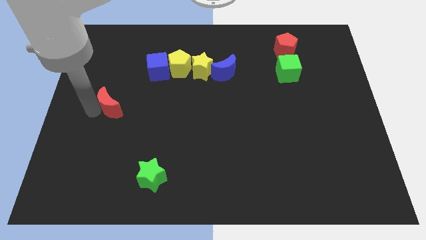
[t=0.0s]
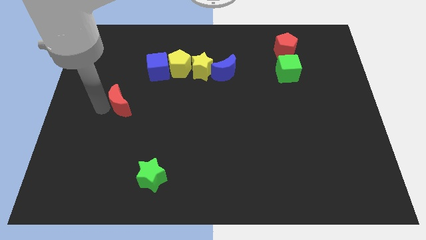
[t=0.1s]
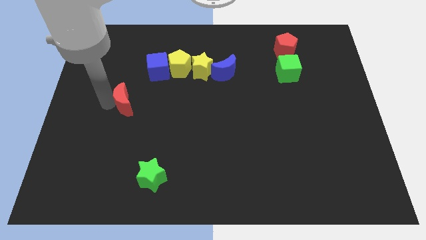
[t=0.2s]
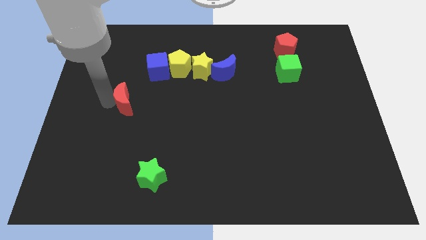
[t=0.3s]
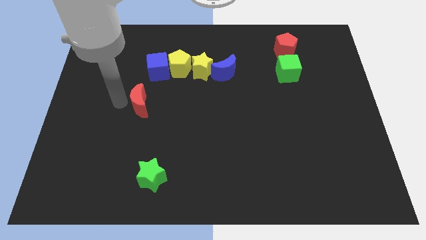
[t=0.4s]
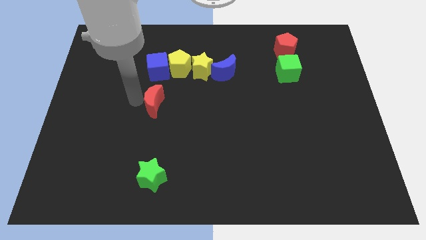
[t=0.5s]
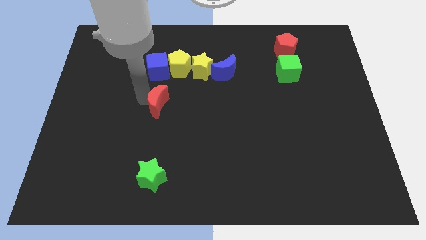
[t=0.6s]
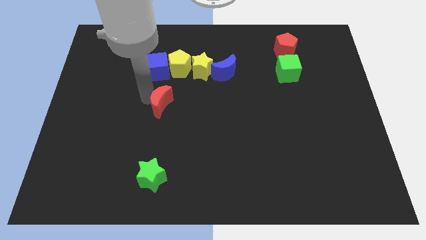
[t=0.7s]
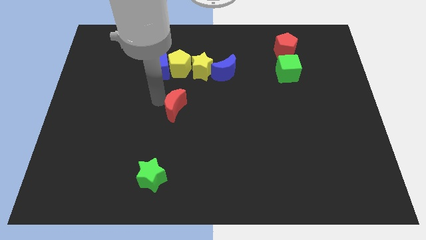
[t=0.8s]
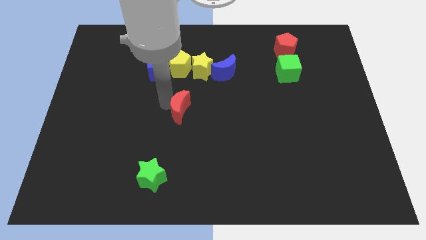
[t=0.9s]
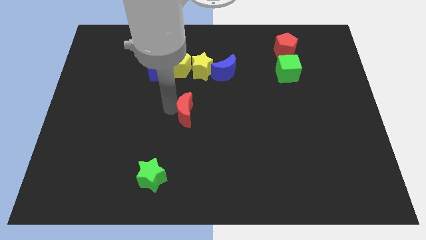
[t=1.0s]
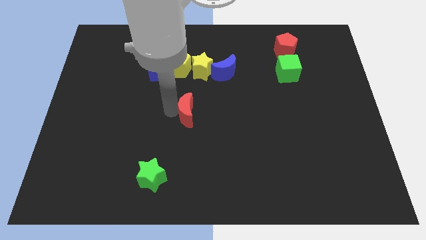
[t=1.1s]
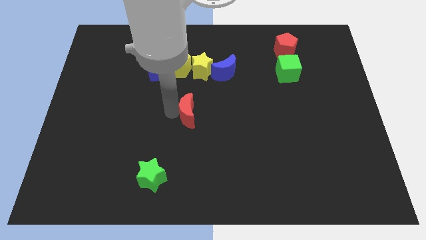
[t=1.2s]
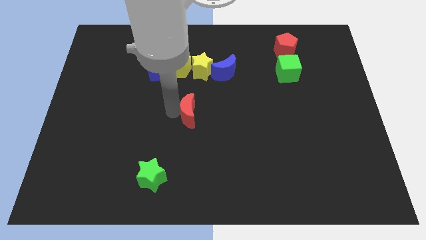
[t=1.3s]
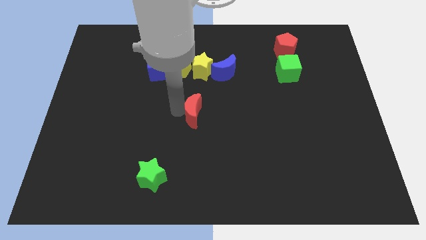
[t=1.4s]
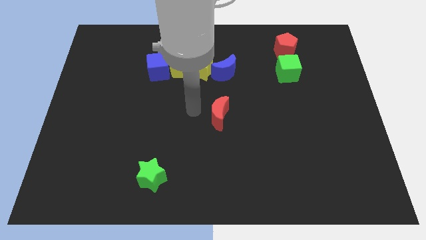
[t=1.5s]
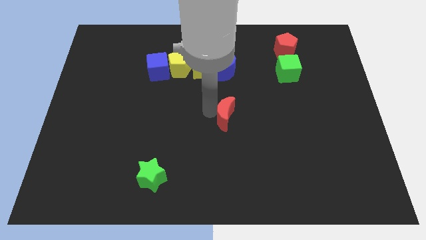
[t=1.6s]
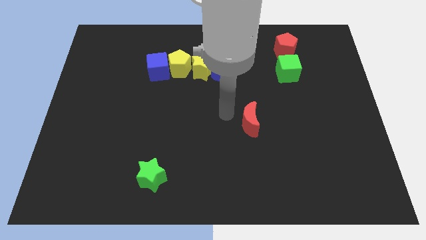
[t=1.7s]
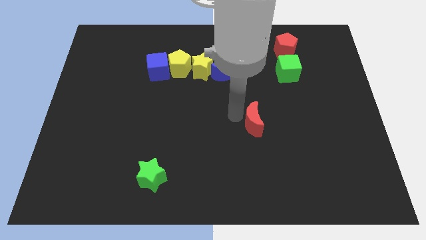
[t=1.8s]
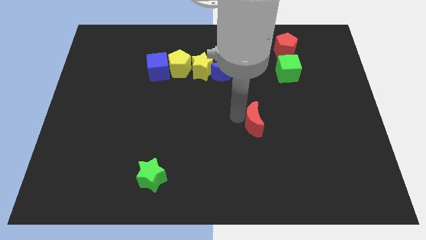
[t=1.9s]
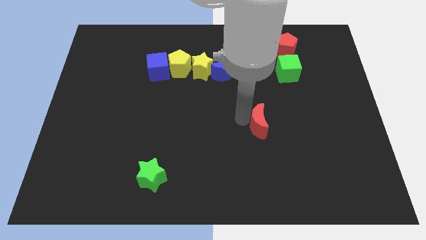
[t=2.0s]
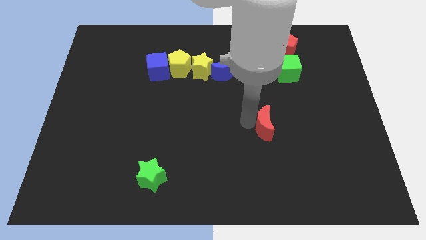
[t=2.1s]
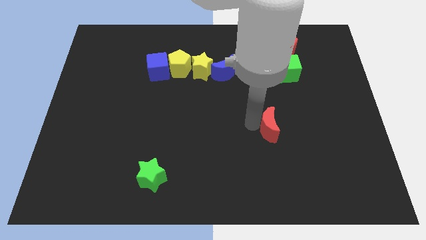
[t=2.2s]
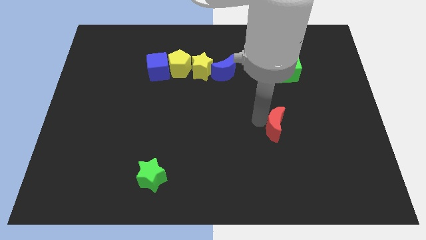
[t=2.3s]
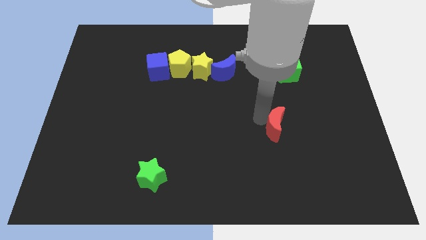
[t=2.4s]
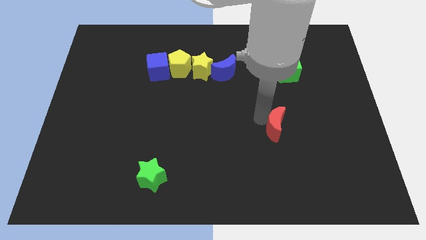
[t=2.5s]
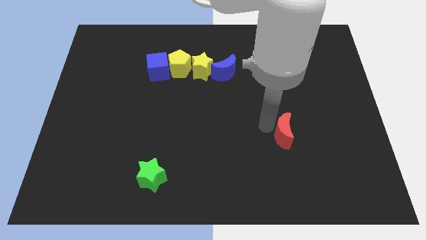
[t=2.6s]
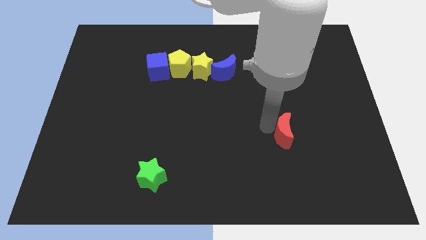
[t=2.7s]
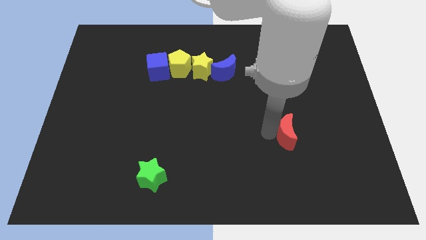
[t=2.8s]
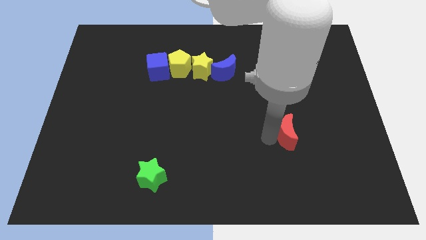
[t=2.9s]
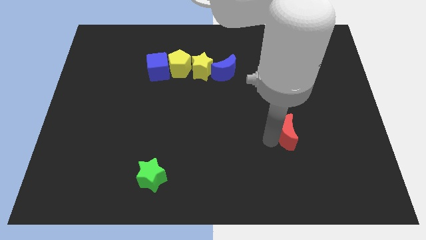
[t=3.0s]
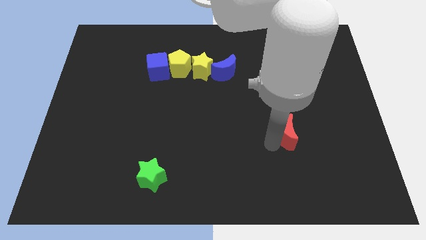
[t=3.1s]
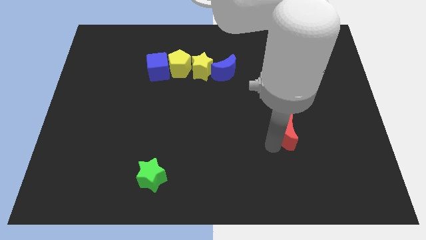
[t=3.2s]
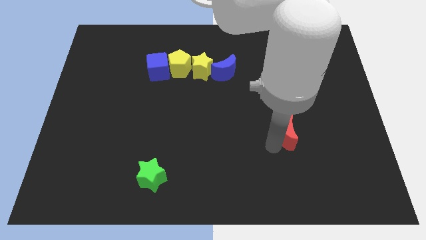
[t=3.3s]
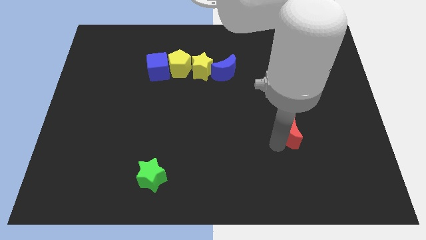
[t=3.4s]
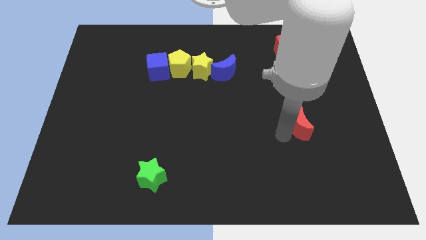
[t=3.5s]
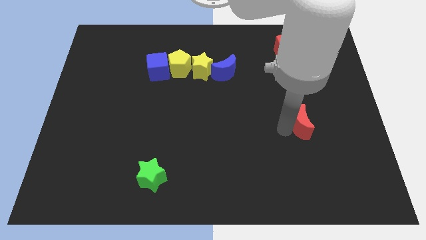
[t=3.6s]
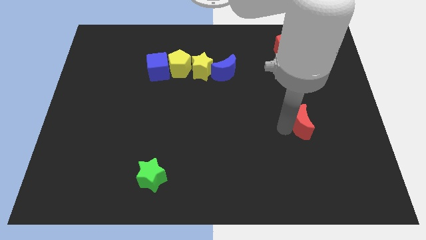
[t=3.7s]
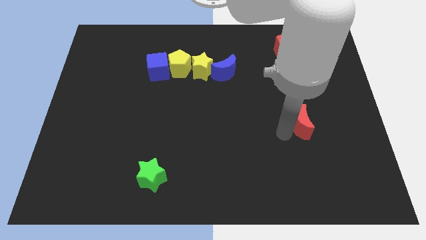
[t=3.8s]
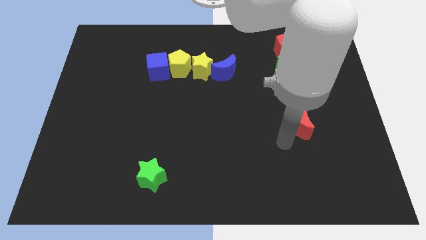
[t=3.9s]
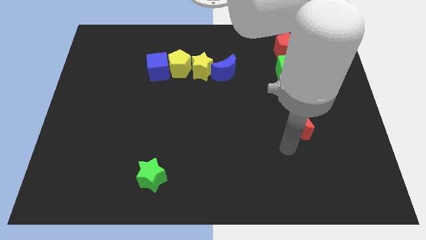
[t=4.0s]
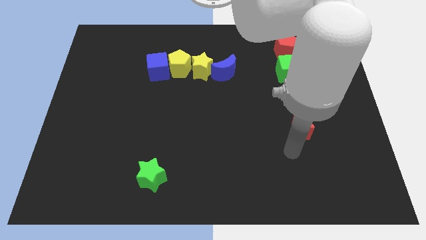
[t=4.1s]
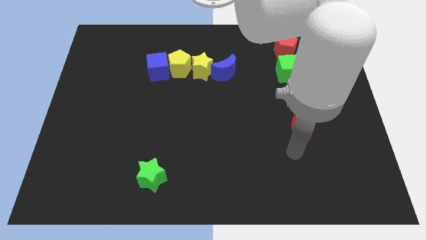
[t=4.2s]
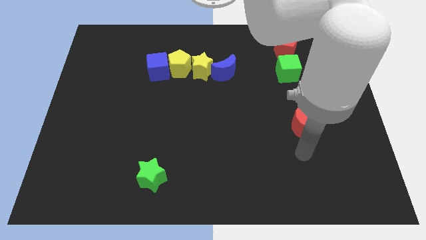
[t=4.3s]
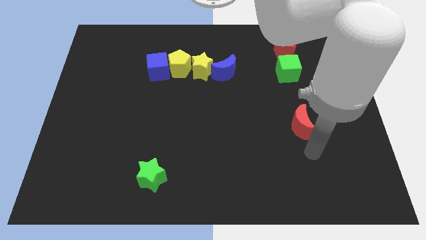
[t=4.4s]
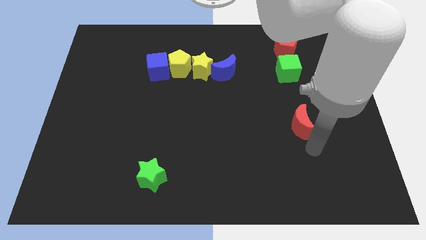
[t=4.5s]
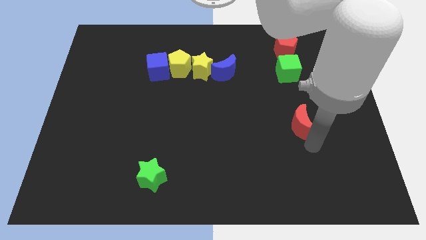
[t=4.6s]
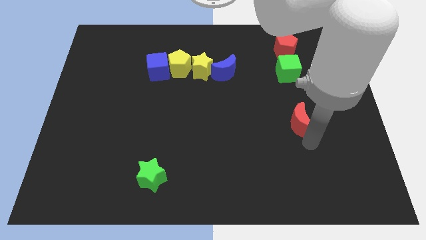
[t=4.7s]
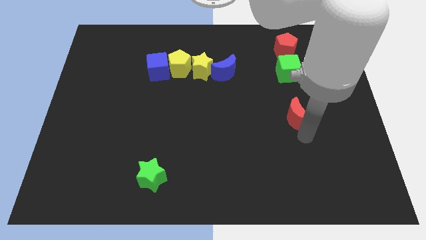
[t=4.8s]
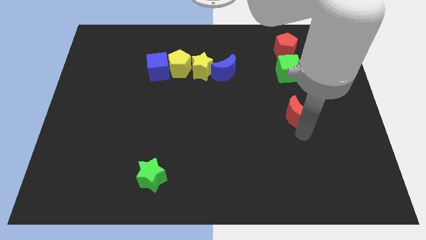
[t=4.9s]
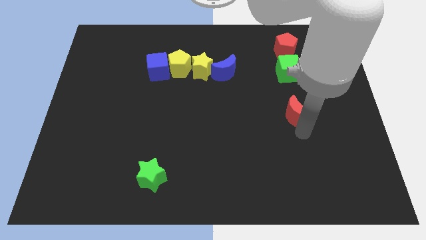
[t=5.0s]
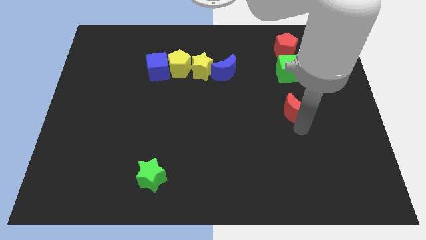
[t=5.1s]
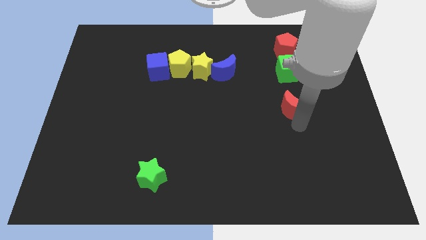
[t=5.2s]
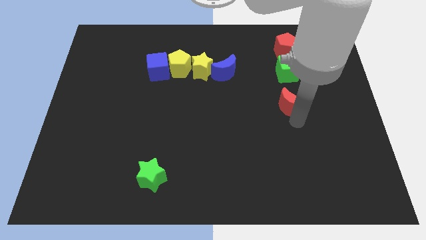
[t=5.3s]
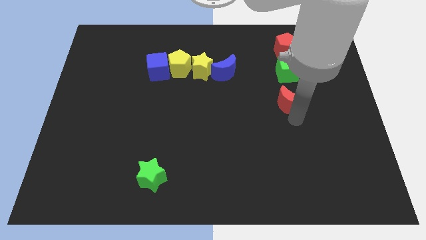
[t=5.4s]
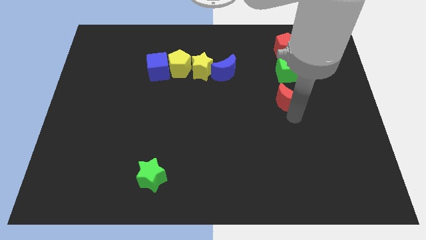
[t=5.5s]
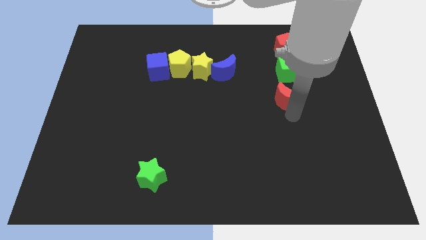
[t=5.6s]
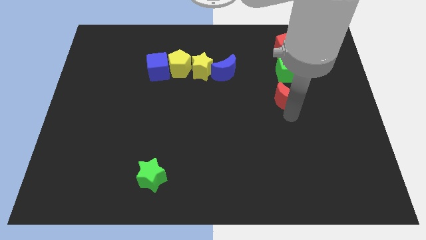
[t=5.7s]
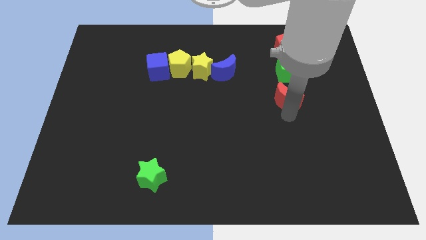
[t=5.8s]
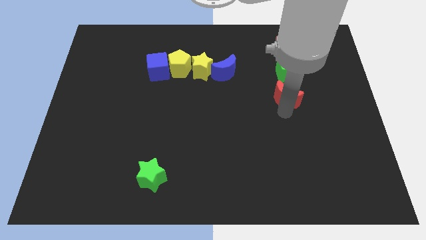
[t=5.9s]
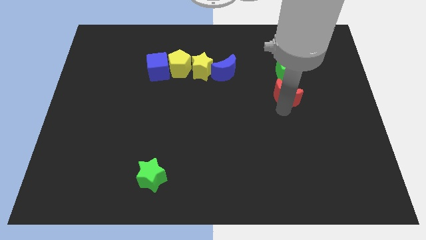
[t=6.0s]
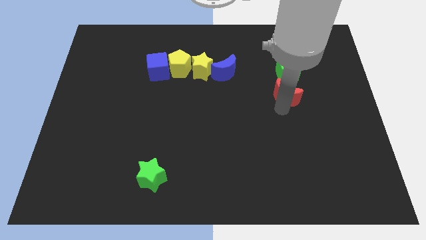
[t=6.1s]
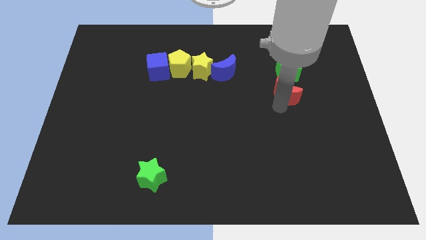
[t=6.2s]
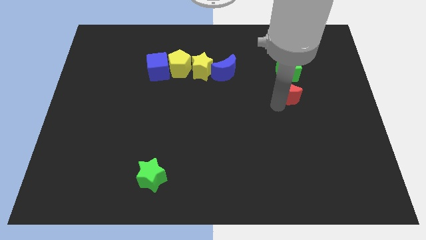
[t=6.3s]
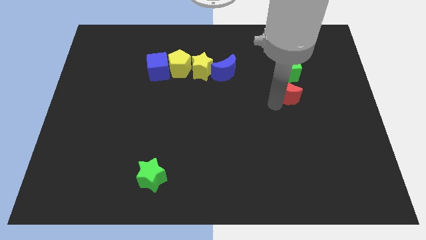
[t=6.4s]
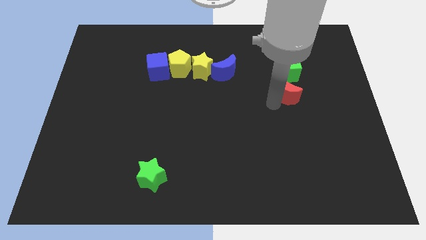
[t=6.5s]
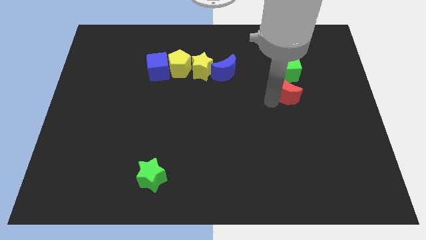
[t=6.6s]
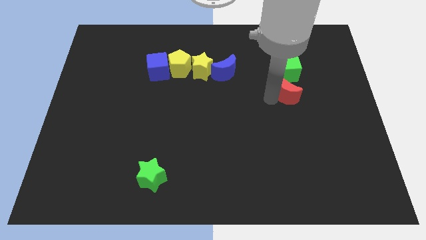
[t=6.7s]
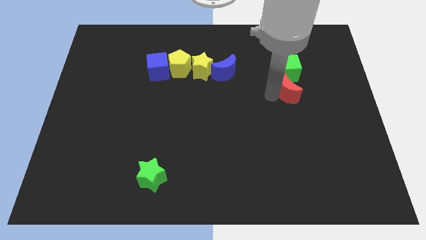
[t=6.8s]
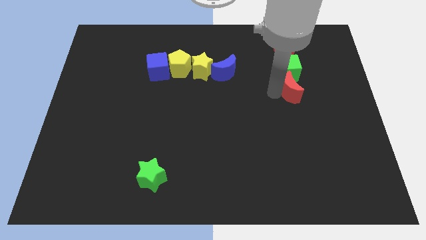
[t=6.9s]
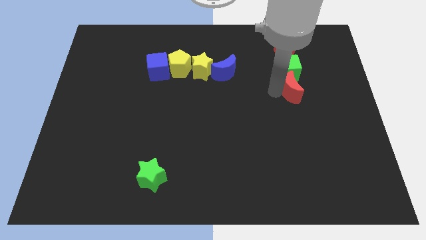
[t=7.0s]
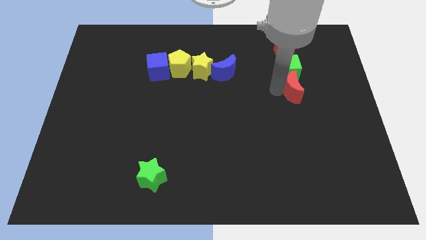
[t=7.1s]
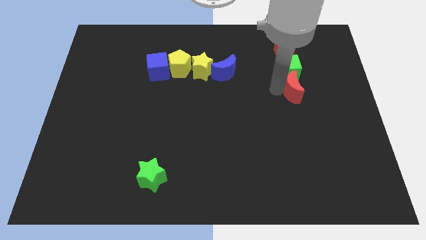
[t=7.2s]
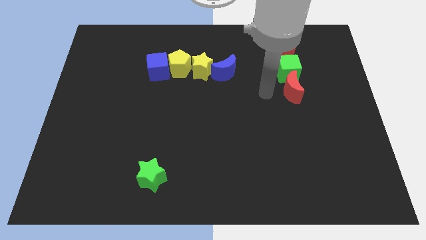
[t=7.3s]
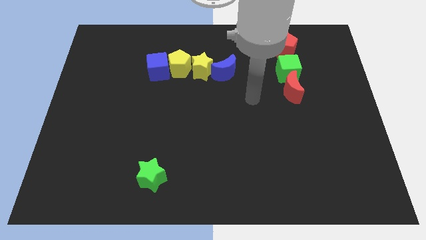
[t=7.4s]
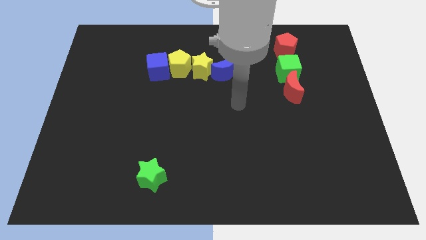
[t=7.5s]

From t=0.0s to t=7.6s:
move the red crescent to the bottom of the green cube

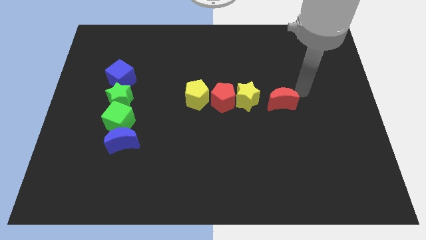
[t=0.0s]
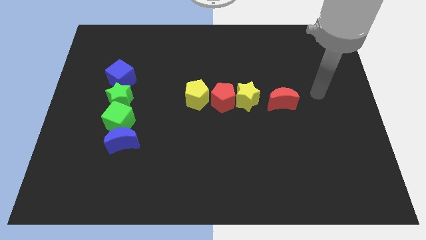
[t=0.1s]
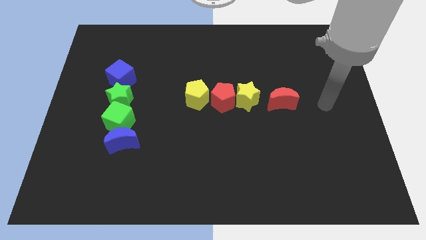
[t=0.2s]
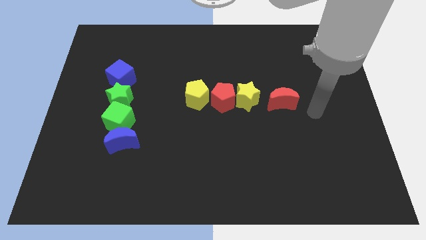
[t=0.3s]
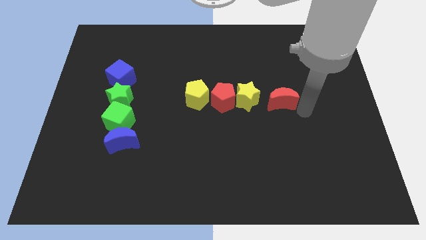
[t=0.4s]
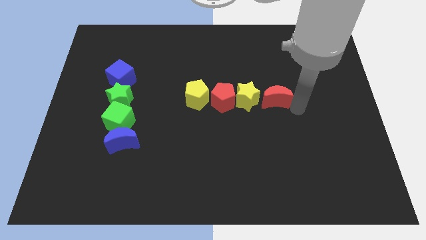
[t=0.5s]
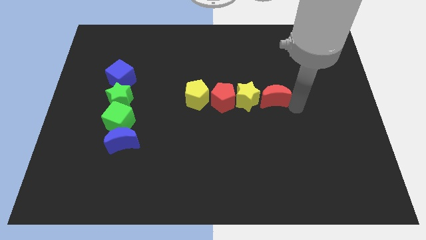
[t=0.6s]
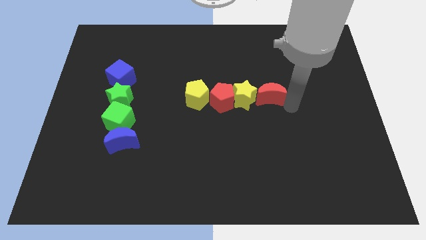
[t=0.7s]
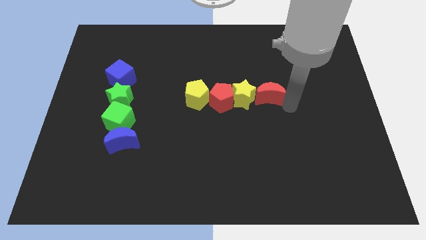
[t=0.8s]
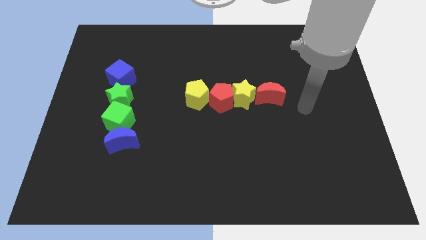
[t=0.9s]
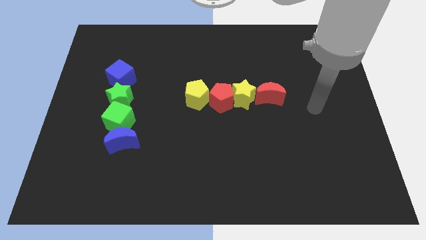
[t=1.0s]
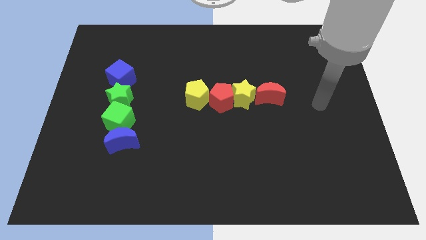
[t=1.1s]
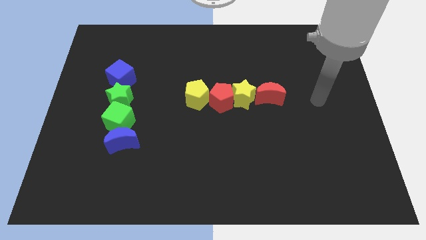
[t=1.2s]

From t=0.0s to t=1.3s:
push the red crescent into the yellow star
